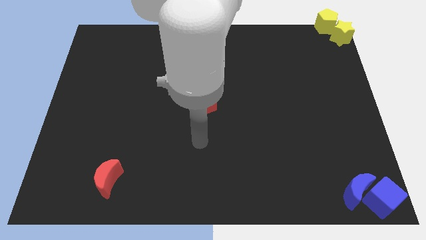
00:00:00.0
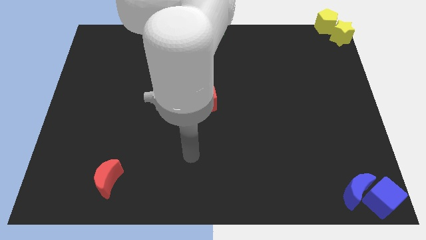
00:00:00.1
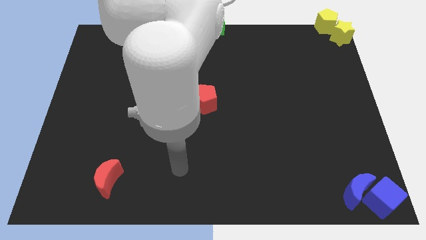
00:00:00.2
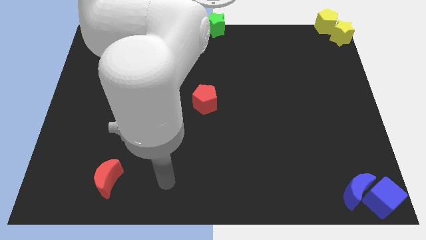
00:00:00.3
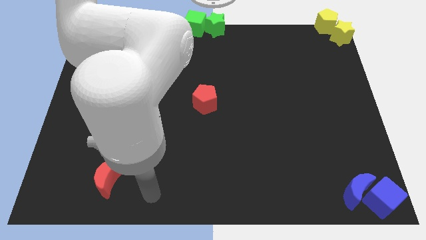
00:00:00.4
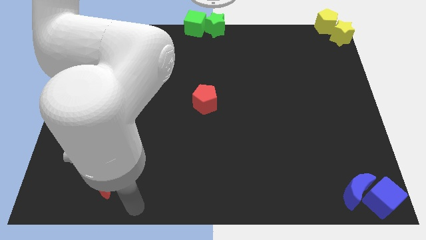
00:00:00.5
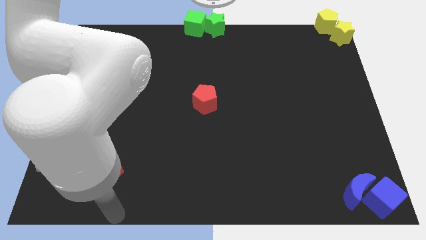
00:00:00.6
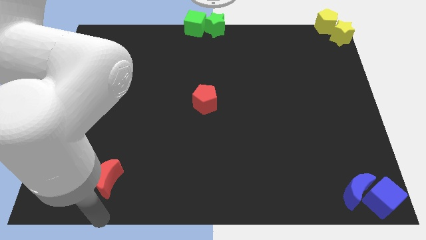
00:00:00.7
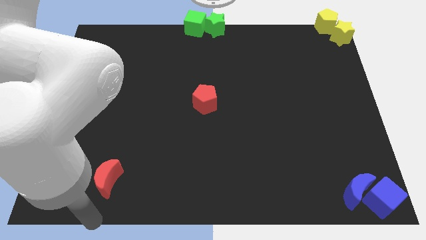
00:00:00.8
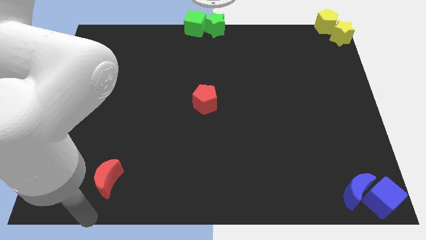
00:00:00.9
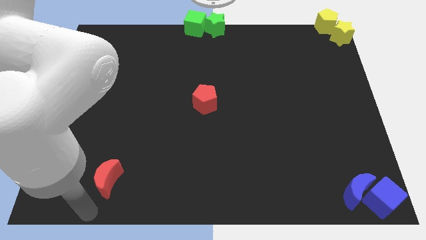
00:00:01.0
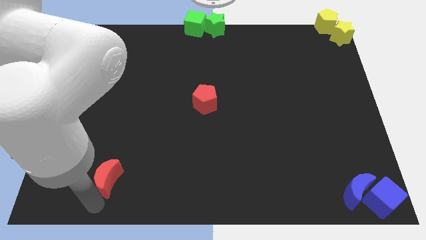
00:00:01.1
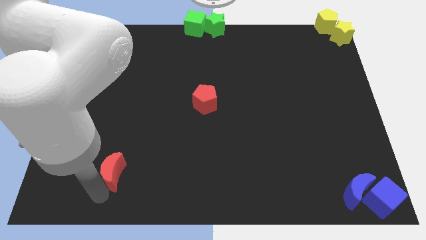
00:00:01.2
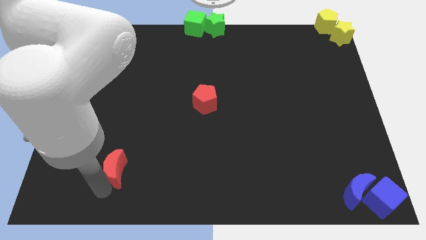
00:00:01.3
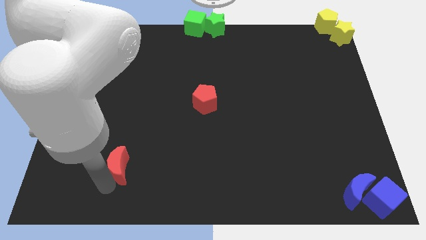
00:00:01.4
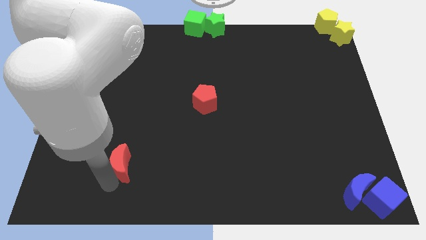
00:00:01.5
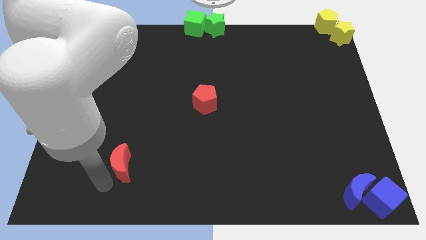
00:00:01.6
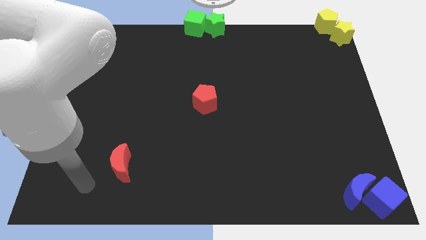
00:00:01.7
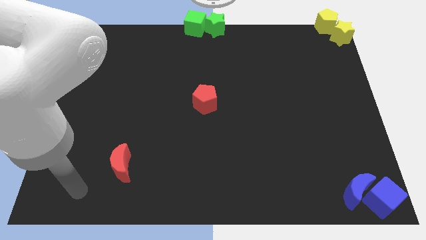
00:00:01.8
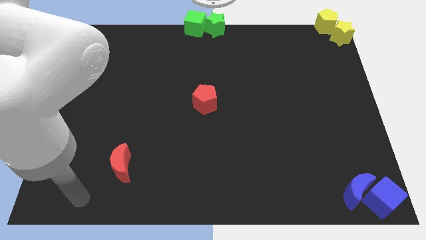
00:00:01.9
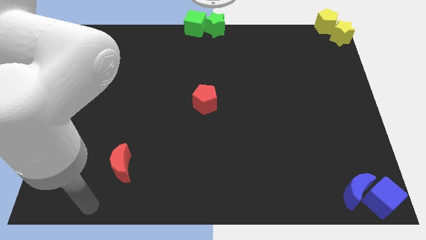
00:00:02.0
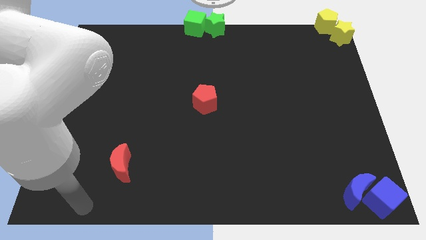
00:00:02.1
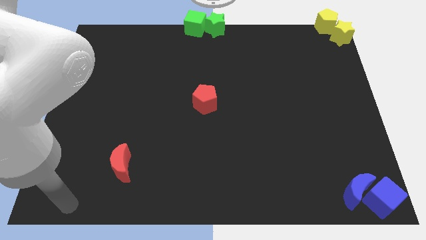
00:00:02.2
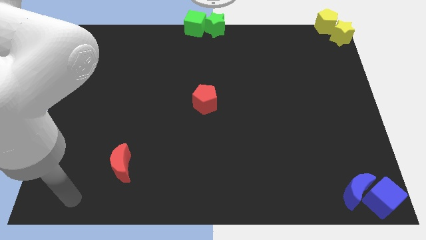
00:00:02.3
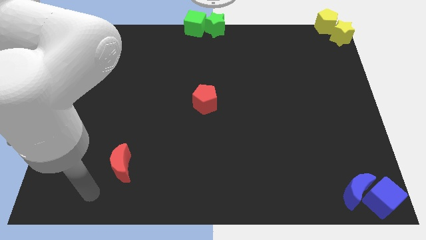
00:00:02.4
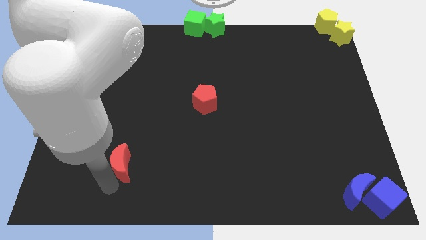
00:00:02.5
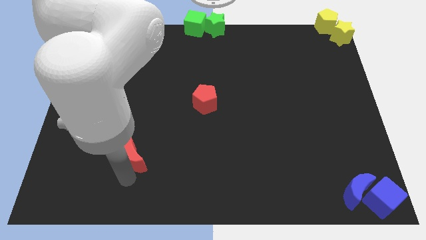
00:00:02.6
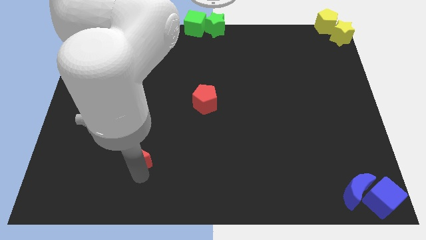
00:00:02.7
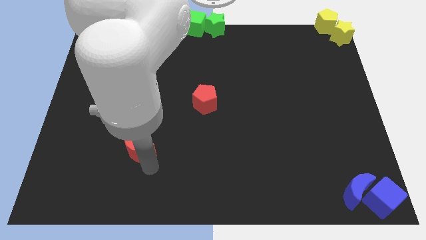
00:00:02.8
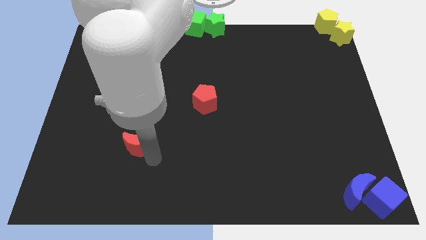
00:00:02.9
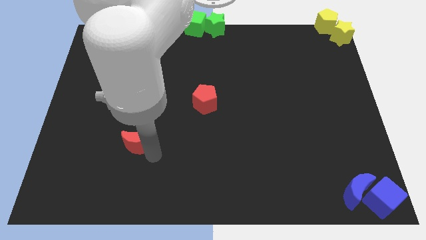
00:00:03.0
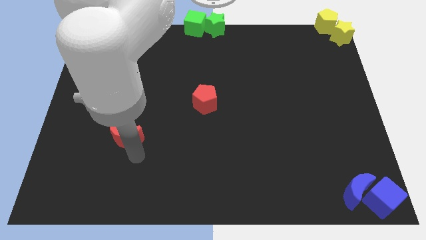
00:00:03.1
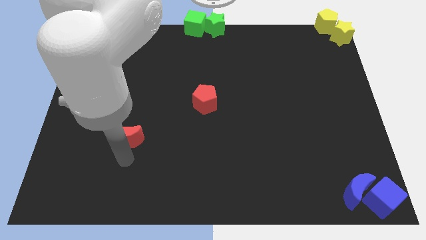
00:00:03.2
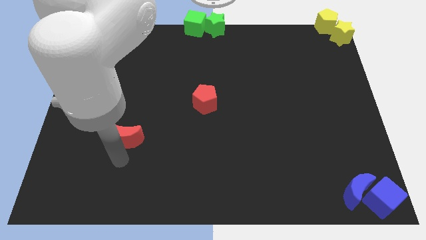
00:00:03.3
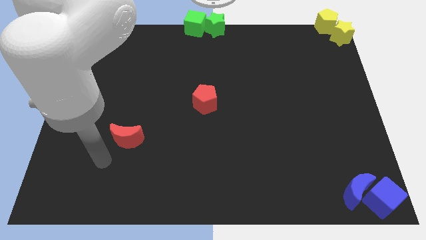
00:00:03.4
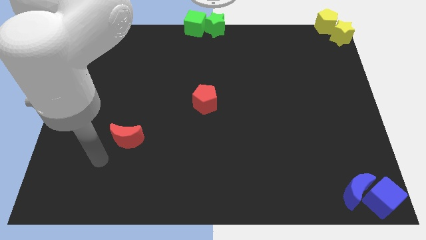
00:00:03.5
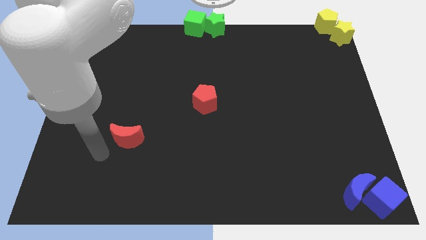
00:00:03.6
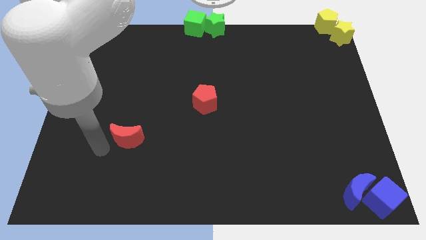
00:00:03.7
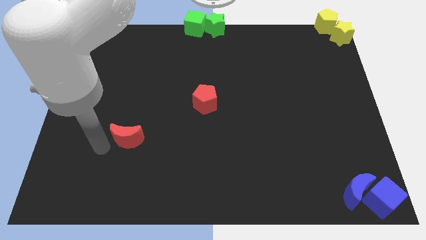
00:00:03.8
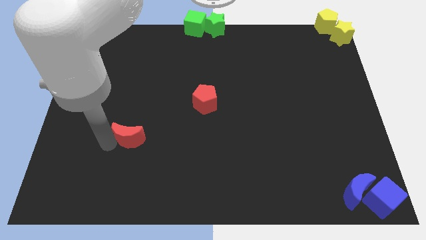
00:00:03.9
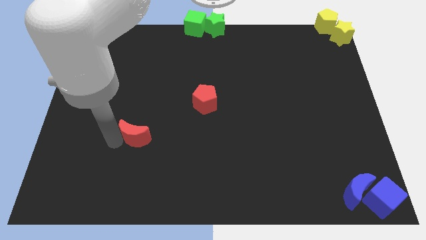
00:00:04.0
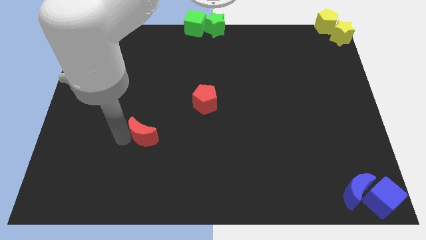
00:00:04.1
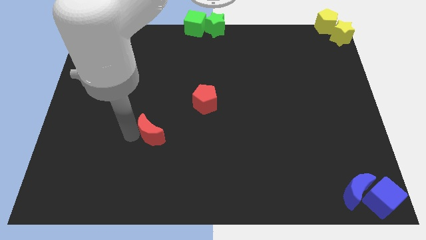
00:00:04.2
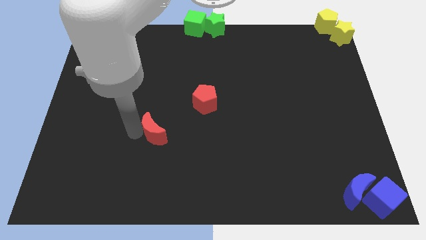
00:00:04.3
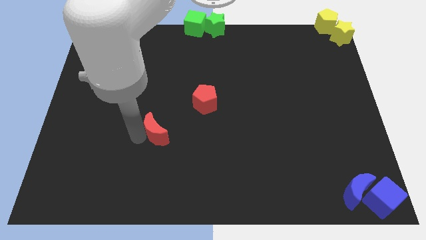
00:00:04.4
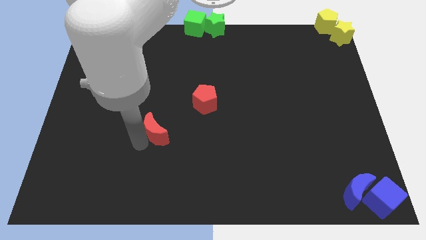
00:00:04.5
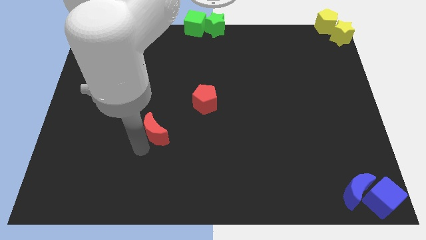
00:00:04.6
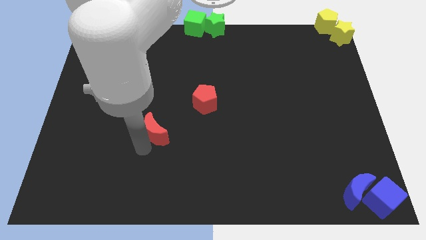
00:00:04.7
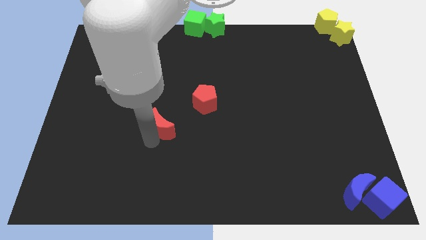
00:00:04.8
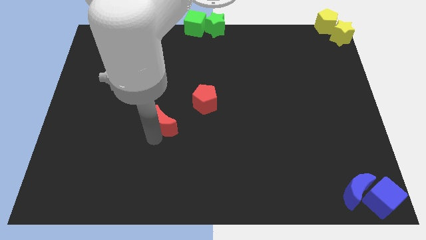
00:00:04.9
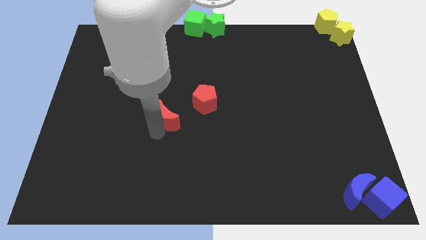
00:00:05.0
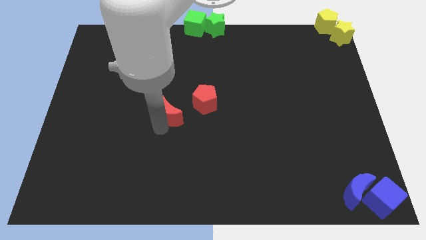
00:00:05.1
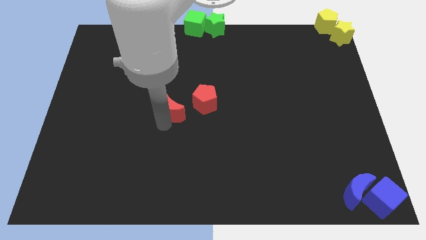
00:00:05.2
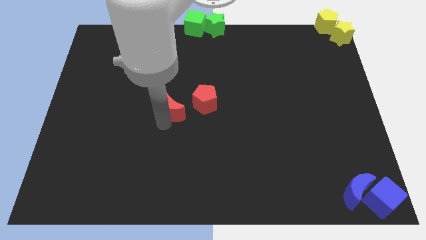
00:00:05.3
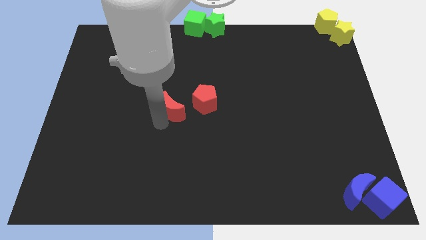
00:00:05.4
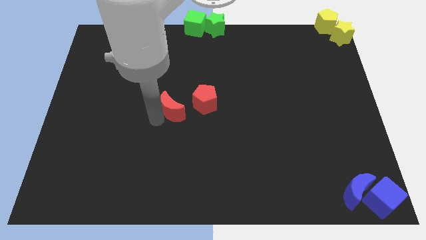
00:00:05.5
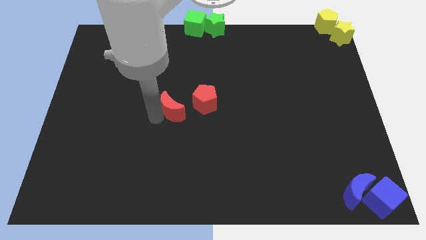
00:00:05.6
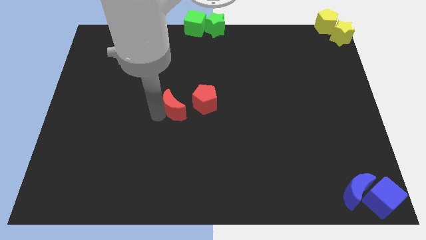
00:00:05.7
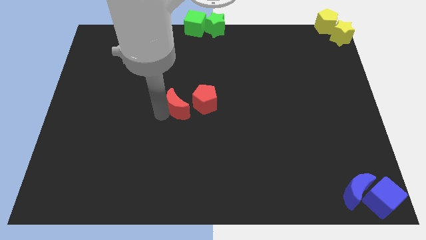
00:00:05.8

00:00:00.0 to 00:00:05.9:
place the red moon to the left side of red pentagon

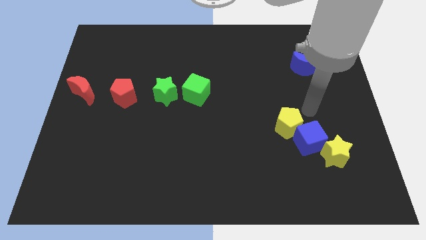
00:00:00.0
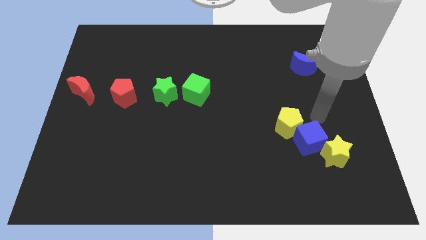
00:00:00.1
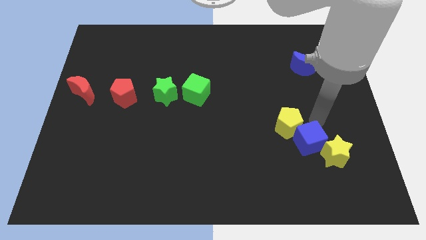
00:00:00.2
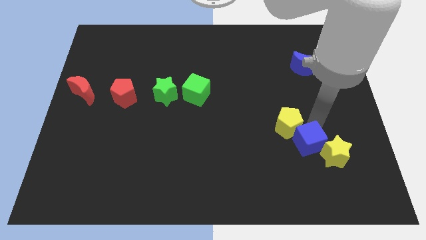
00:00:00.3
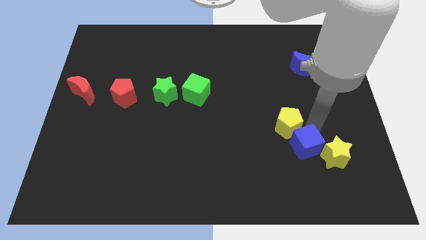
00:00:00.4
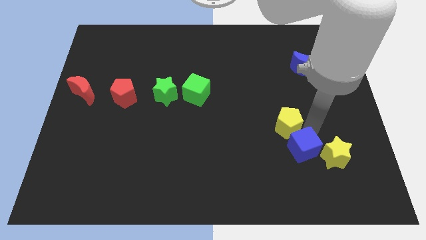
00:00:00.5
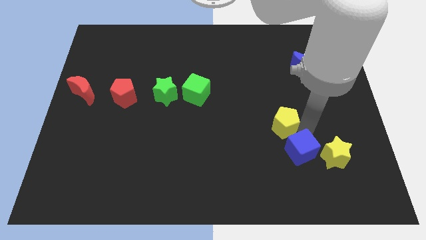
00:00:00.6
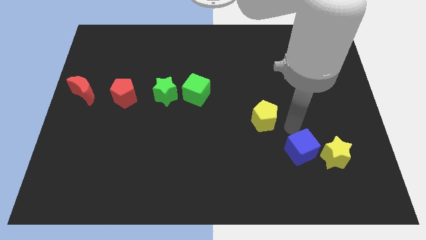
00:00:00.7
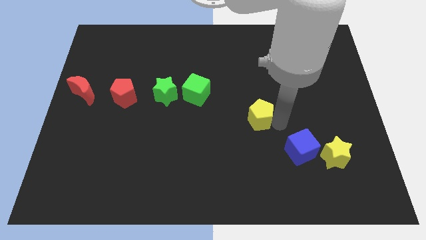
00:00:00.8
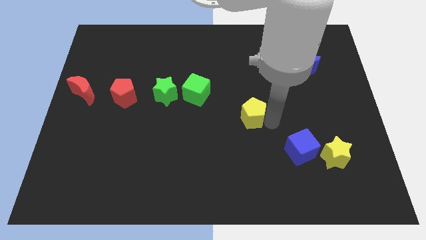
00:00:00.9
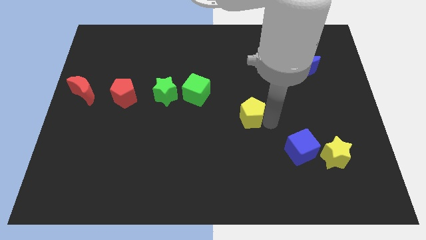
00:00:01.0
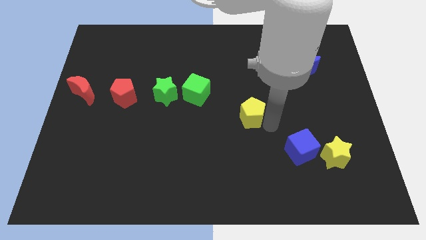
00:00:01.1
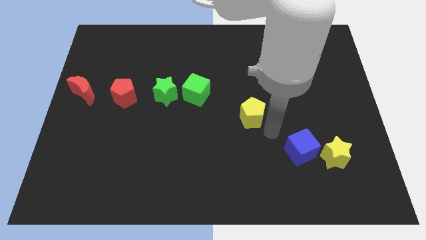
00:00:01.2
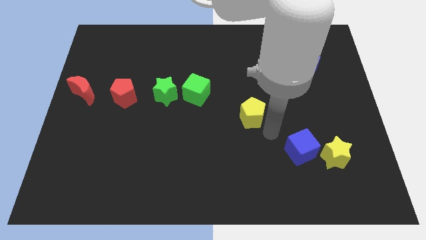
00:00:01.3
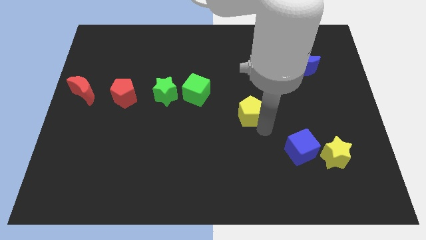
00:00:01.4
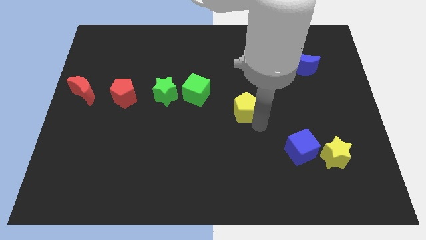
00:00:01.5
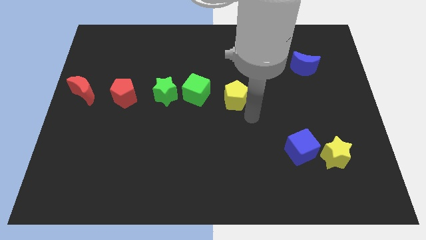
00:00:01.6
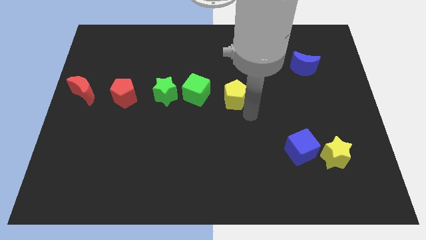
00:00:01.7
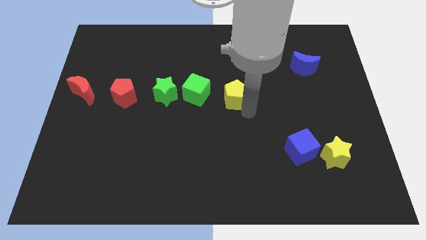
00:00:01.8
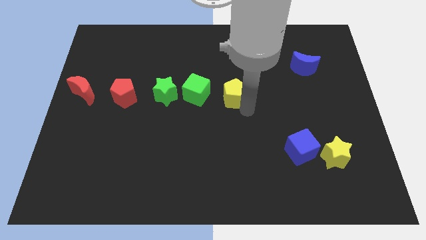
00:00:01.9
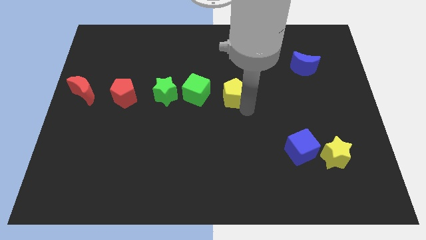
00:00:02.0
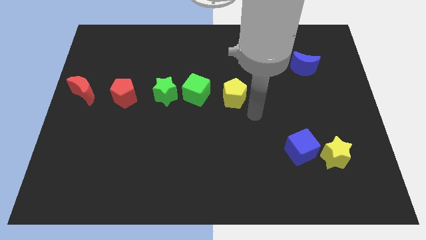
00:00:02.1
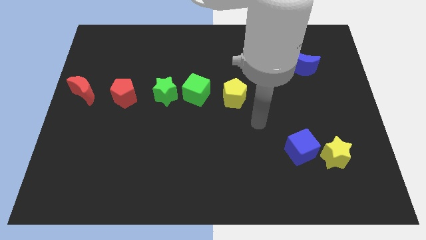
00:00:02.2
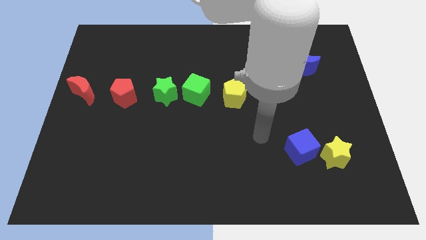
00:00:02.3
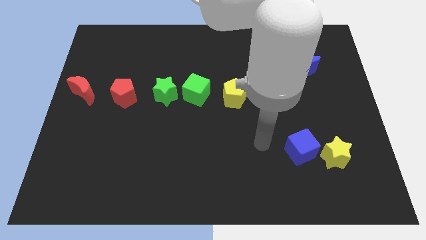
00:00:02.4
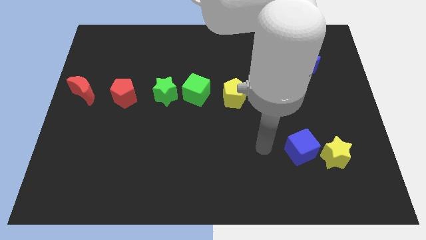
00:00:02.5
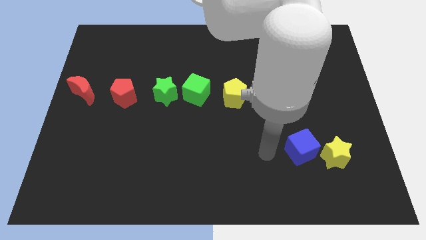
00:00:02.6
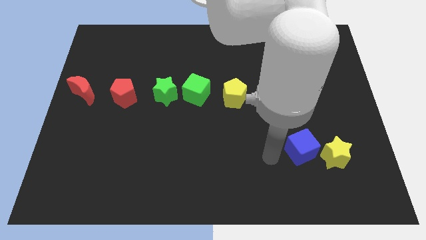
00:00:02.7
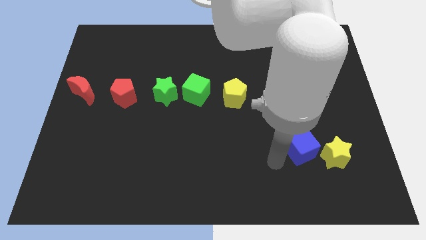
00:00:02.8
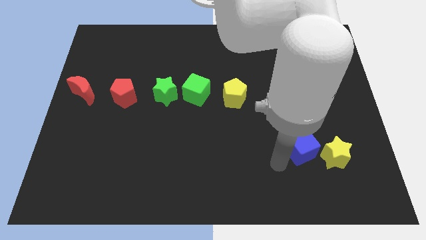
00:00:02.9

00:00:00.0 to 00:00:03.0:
push the yellow pentagon to the right of the green cube to form a horizontal line of blocks
